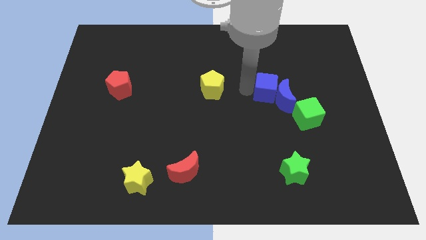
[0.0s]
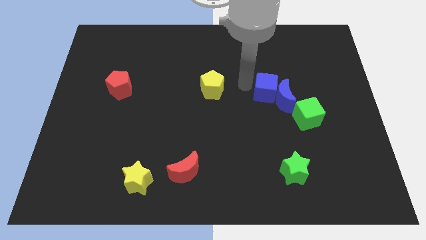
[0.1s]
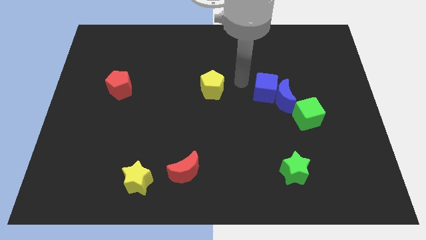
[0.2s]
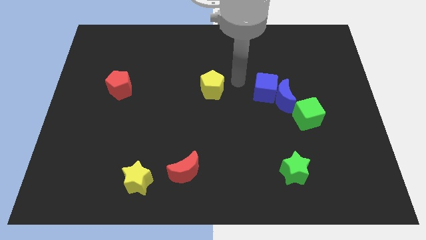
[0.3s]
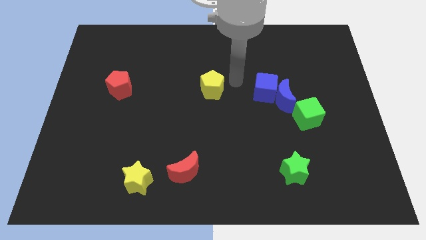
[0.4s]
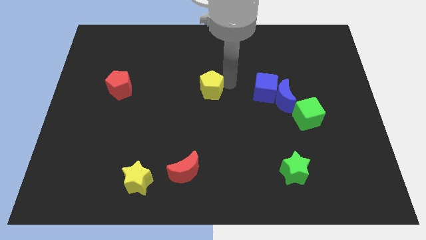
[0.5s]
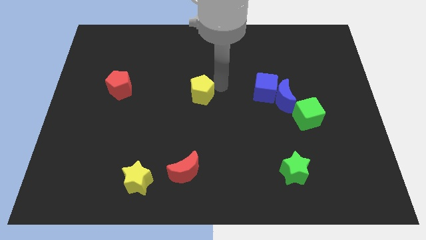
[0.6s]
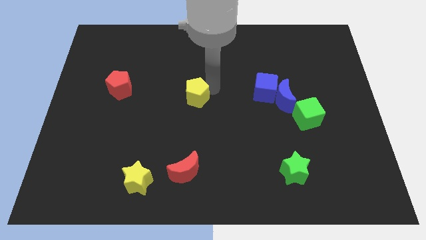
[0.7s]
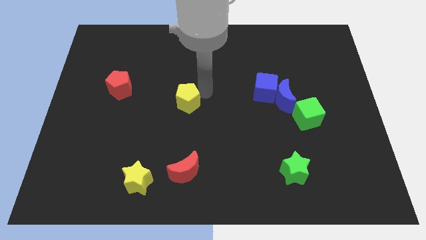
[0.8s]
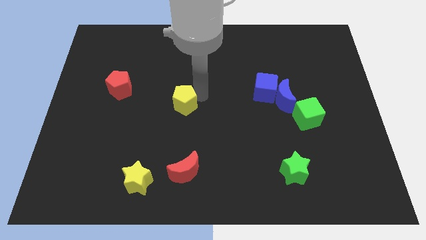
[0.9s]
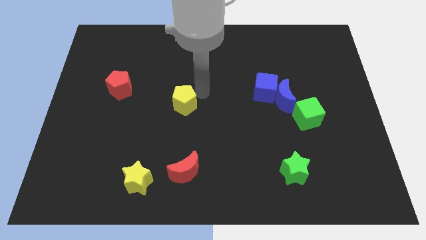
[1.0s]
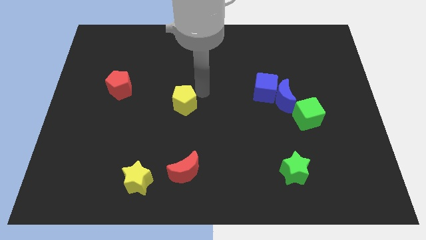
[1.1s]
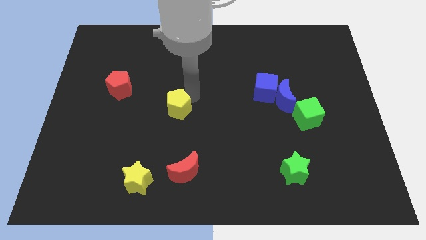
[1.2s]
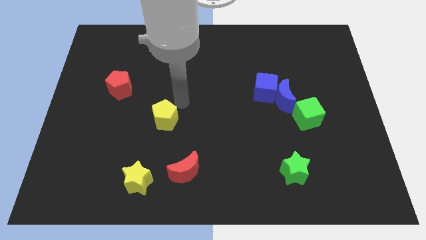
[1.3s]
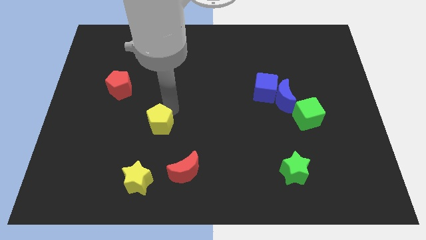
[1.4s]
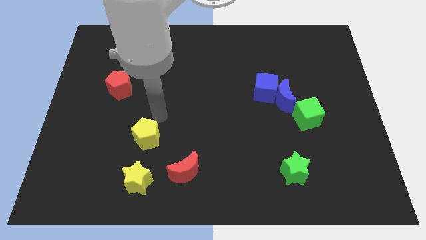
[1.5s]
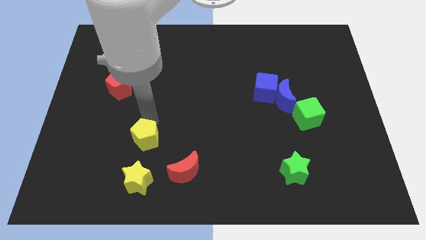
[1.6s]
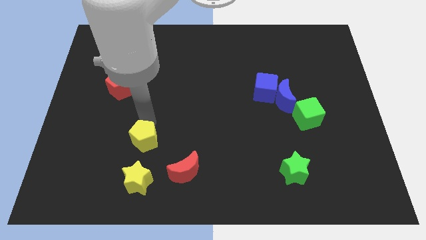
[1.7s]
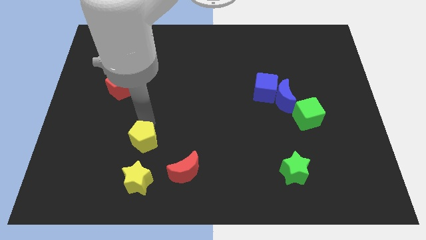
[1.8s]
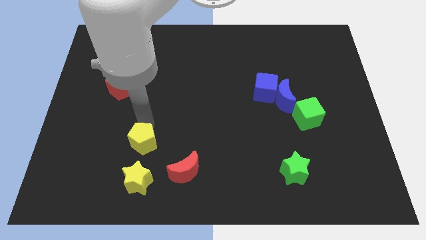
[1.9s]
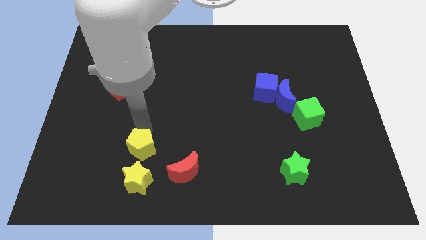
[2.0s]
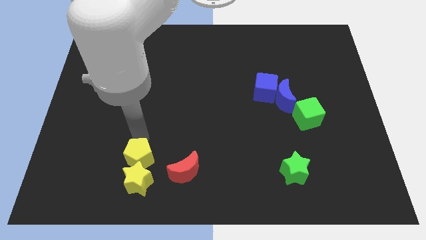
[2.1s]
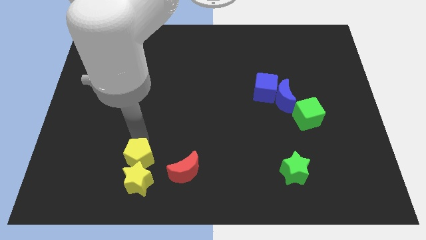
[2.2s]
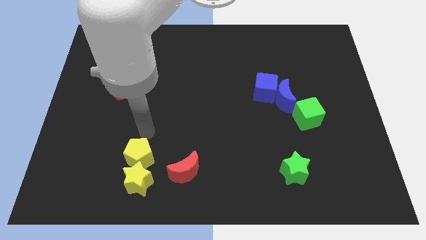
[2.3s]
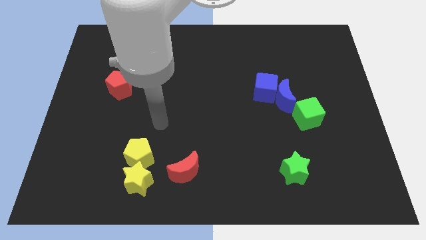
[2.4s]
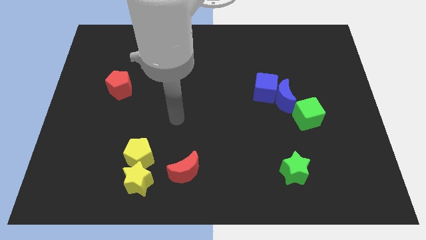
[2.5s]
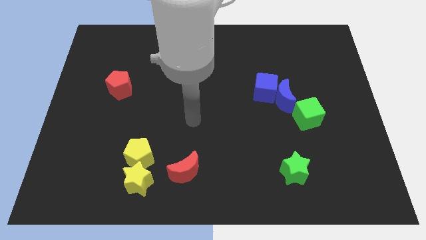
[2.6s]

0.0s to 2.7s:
move yellow pentagon close to yellow star

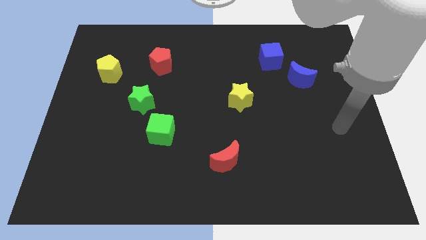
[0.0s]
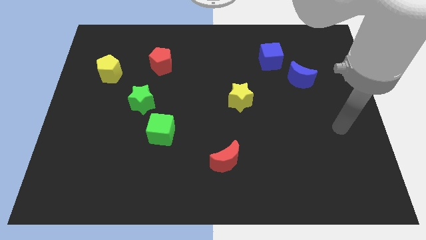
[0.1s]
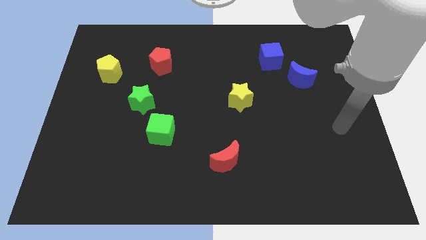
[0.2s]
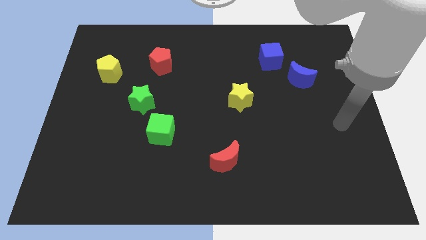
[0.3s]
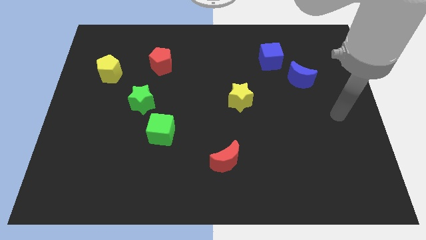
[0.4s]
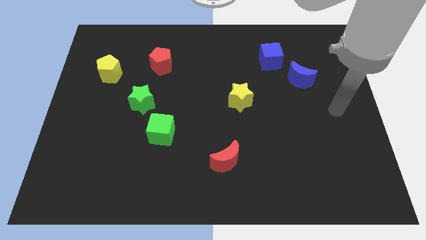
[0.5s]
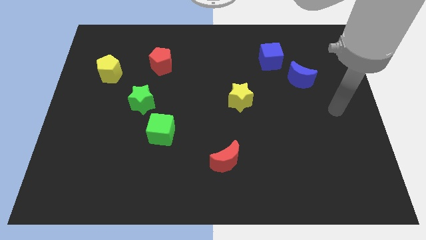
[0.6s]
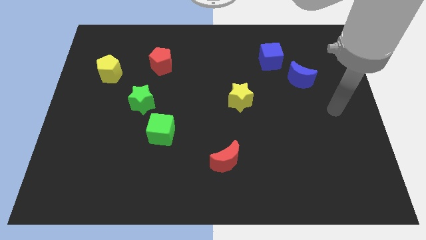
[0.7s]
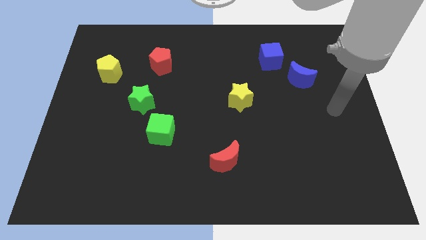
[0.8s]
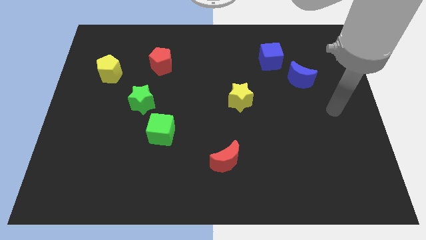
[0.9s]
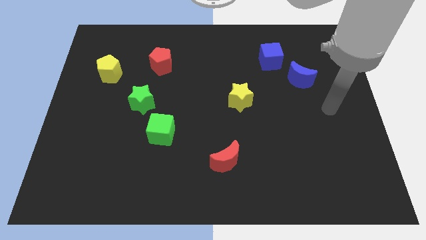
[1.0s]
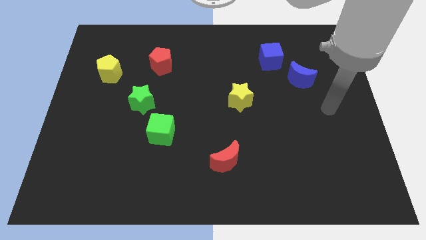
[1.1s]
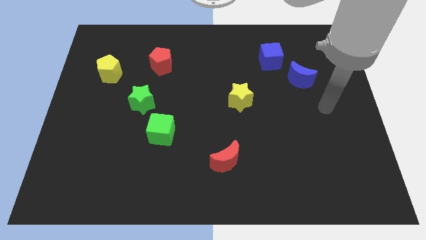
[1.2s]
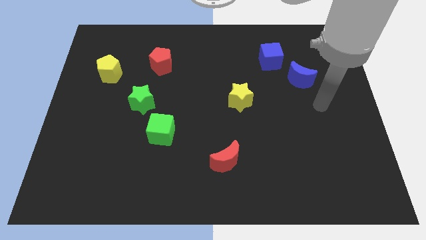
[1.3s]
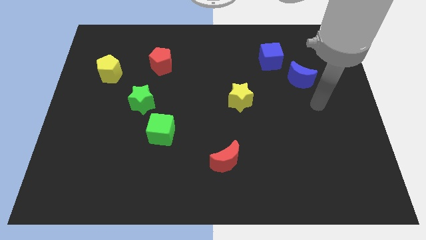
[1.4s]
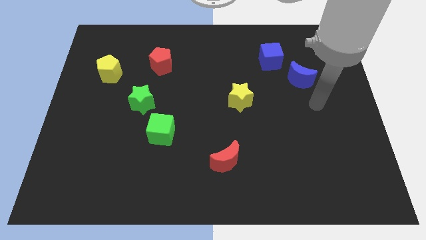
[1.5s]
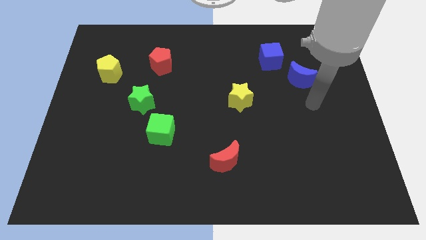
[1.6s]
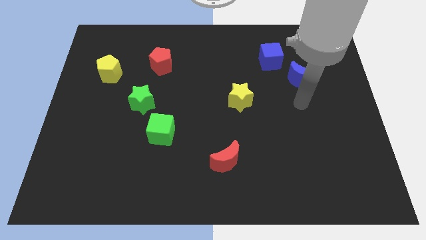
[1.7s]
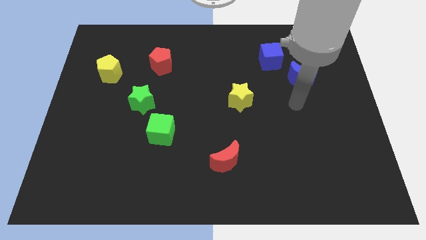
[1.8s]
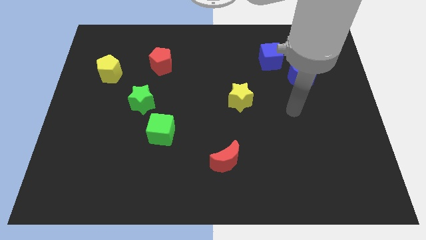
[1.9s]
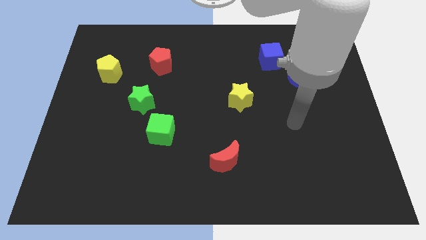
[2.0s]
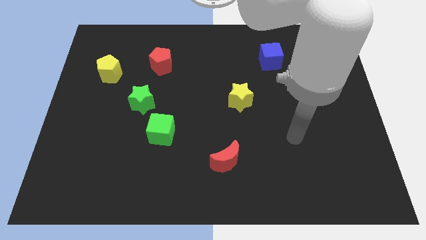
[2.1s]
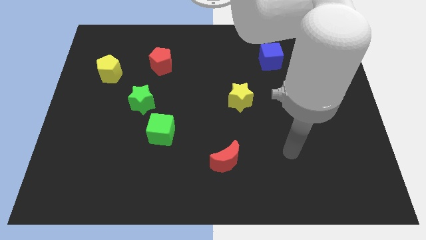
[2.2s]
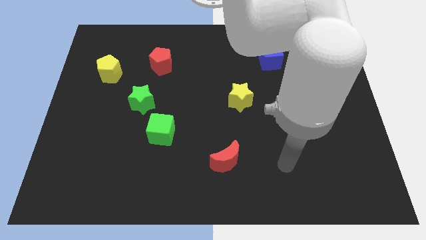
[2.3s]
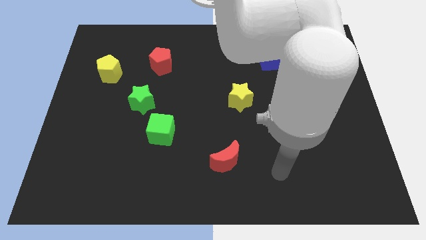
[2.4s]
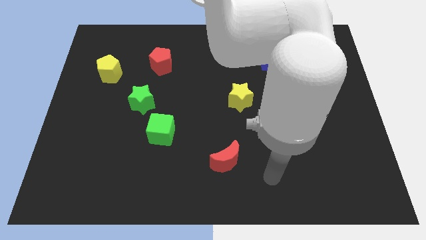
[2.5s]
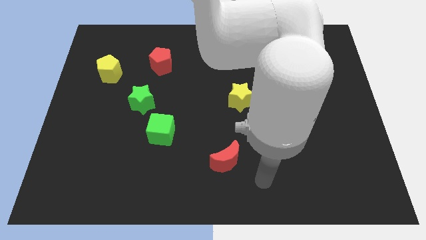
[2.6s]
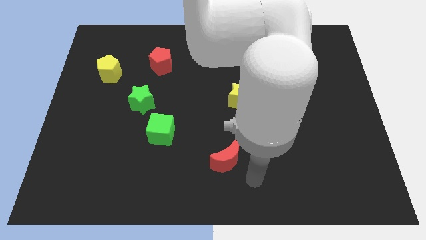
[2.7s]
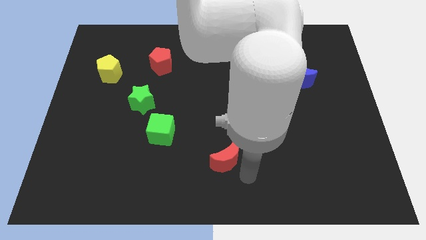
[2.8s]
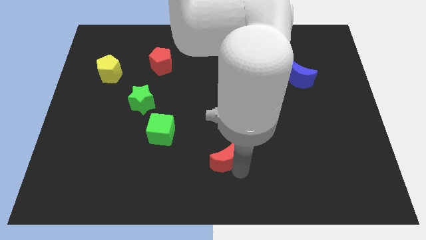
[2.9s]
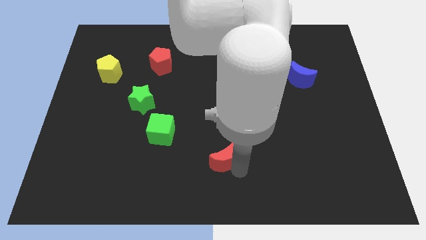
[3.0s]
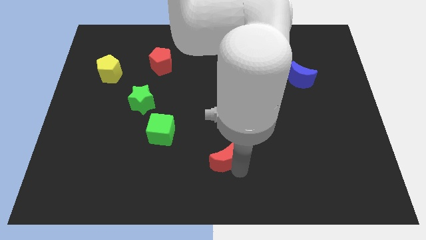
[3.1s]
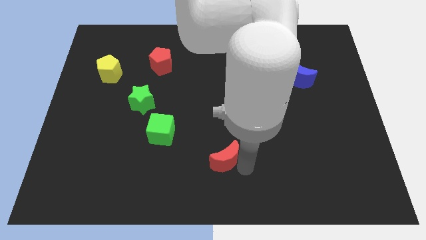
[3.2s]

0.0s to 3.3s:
place the arm below red moon

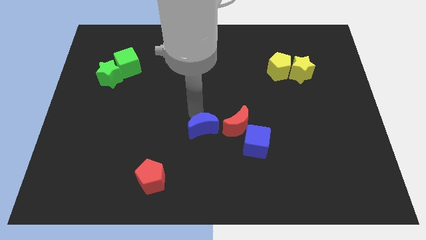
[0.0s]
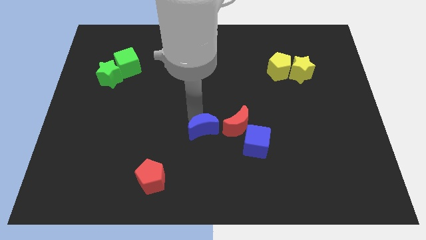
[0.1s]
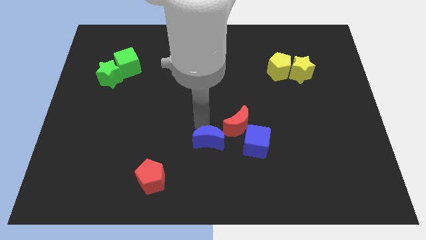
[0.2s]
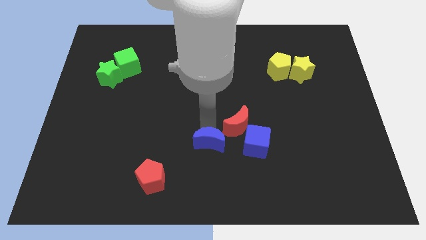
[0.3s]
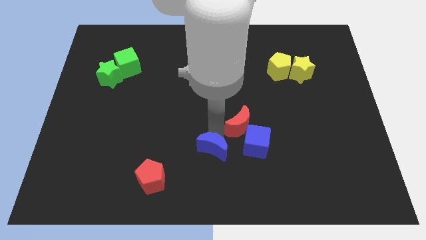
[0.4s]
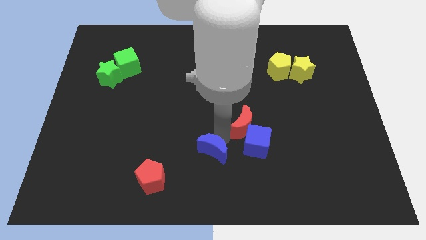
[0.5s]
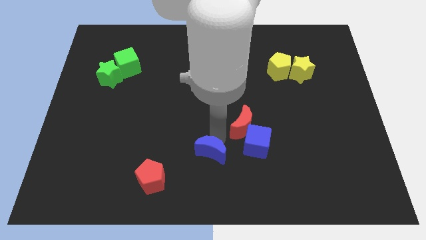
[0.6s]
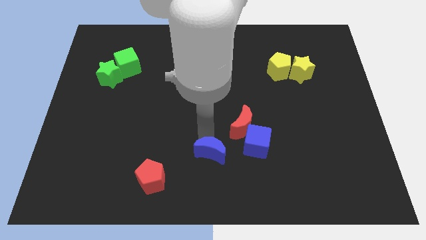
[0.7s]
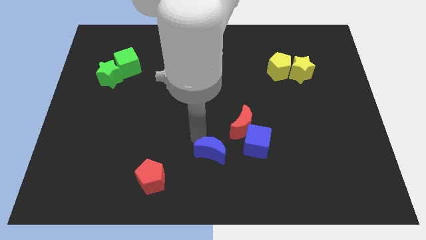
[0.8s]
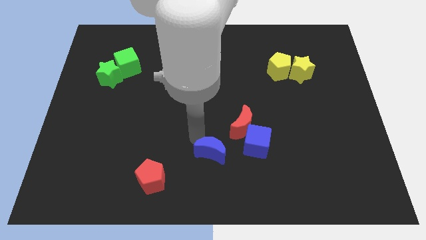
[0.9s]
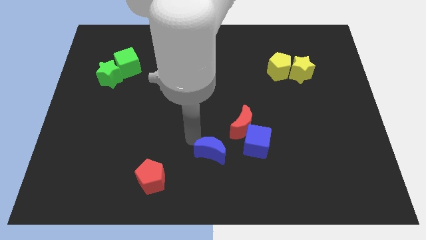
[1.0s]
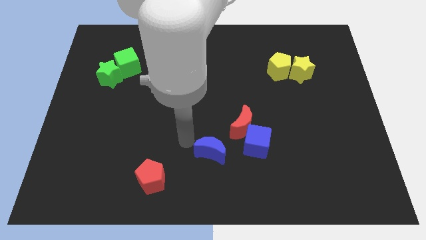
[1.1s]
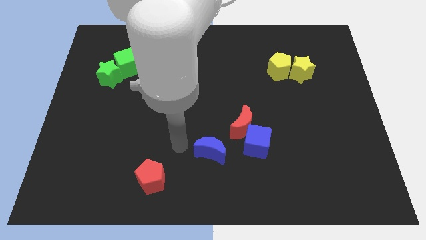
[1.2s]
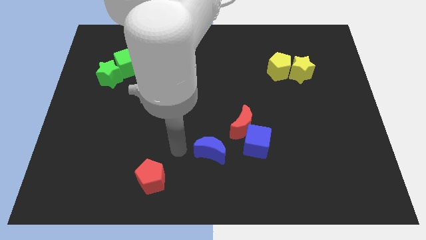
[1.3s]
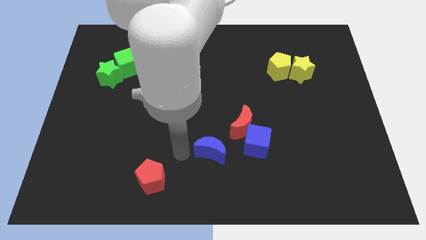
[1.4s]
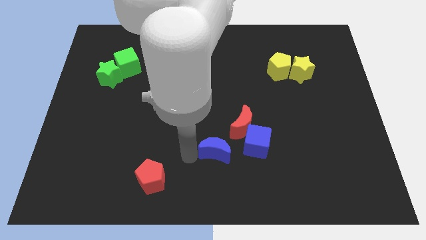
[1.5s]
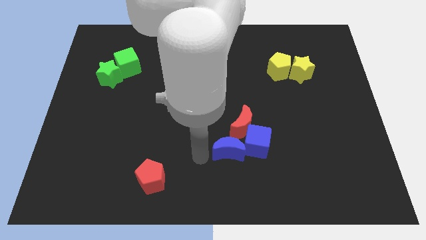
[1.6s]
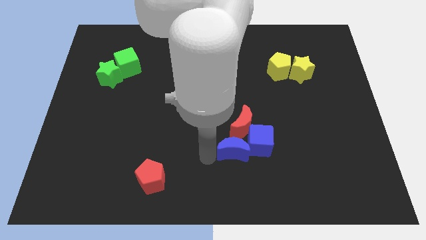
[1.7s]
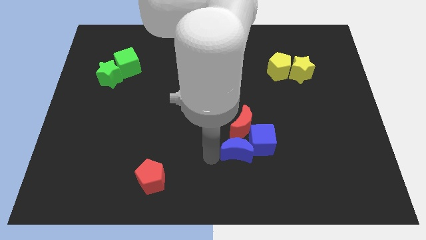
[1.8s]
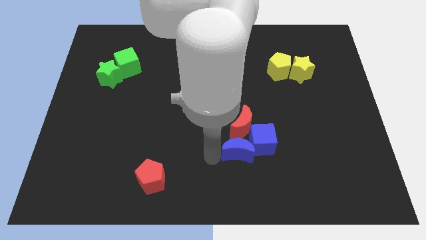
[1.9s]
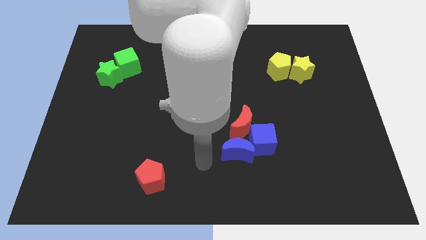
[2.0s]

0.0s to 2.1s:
place the blue moon beside the blue cube

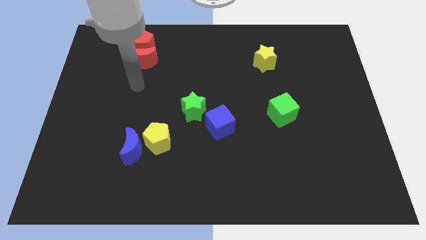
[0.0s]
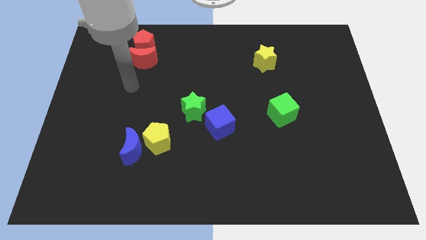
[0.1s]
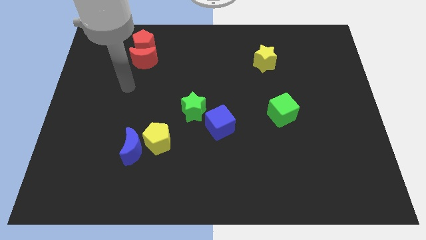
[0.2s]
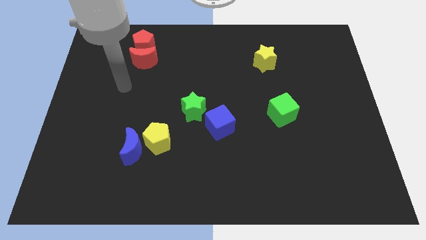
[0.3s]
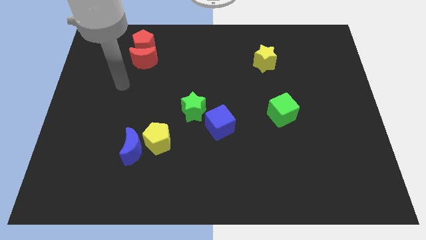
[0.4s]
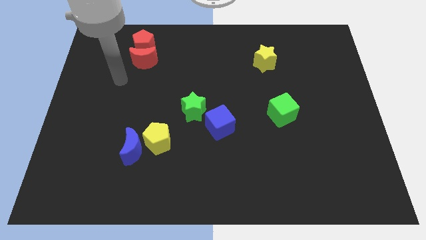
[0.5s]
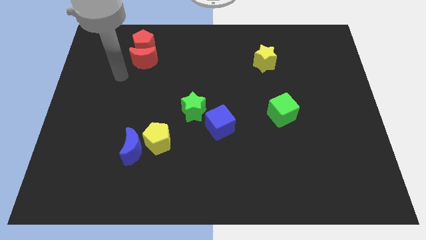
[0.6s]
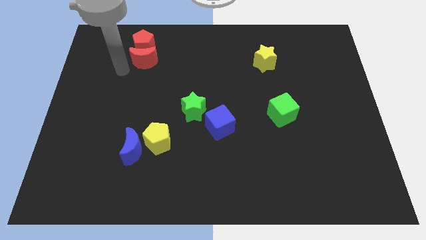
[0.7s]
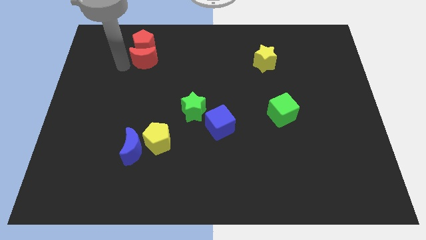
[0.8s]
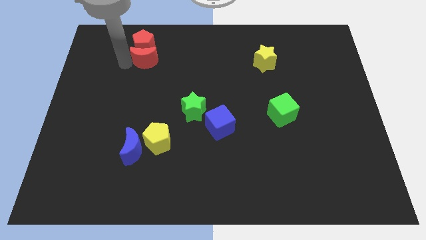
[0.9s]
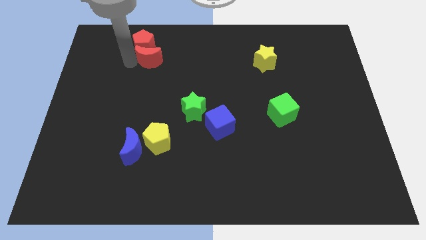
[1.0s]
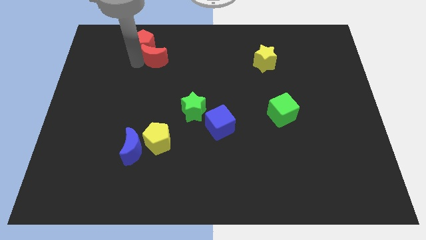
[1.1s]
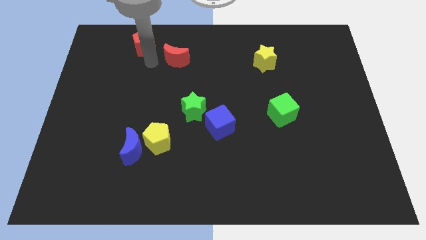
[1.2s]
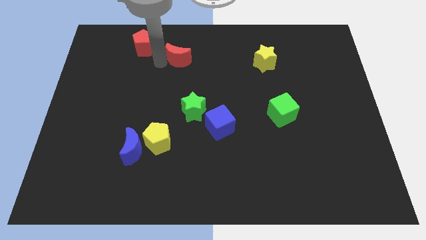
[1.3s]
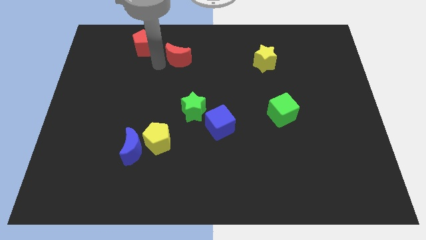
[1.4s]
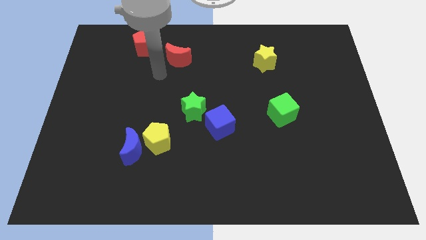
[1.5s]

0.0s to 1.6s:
seperate the red moon from the red penatgon
